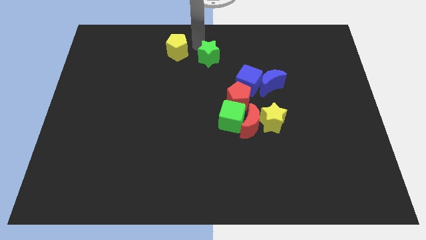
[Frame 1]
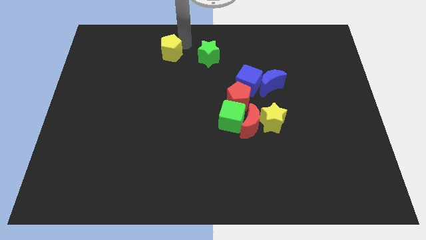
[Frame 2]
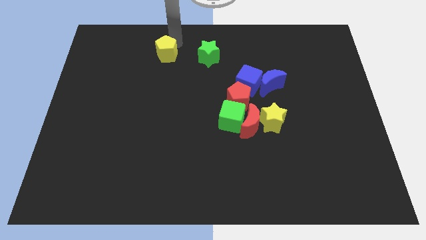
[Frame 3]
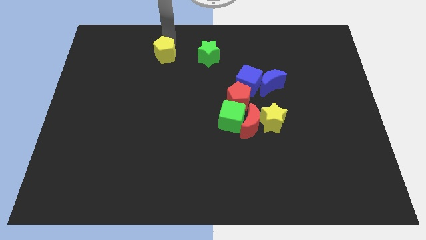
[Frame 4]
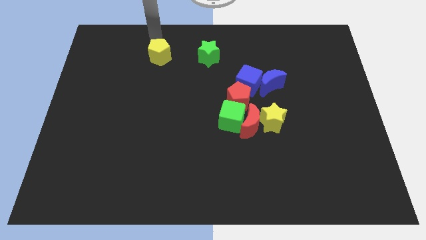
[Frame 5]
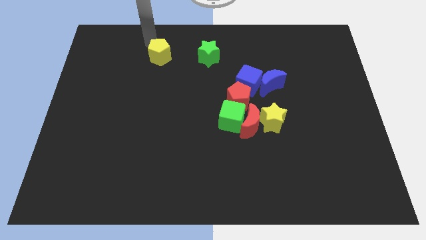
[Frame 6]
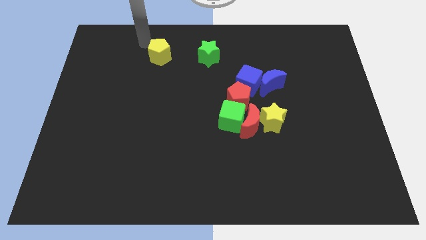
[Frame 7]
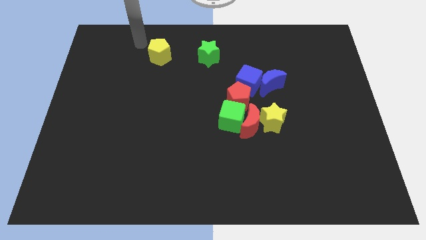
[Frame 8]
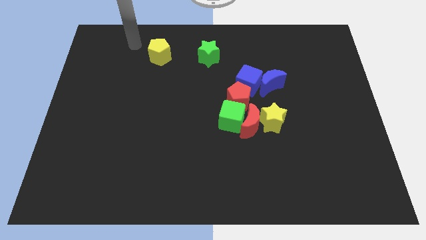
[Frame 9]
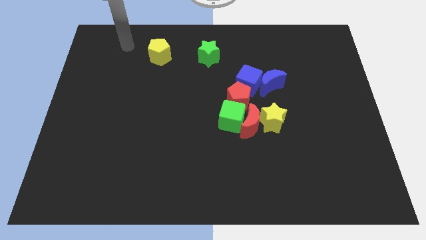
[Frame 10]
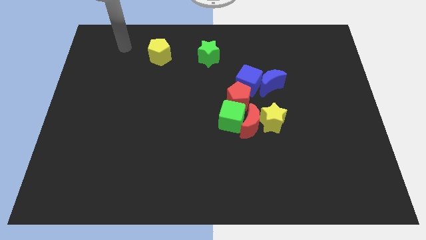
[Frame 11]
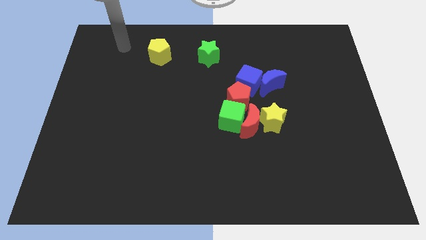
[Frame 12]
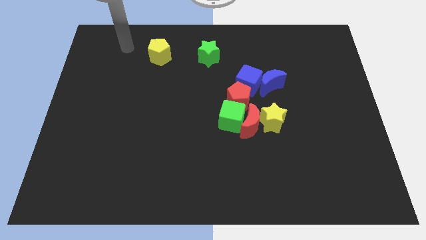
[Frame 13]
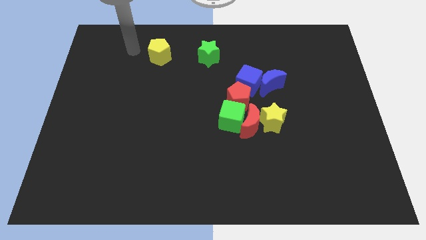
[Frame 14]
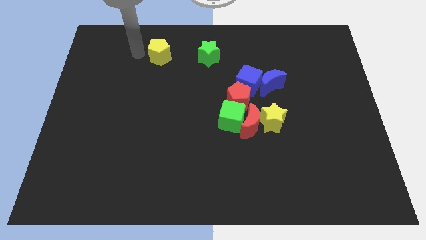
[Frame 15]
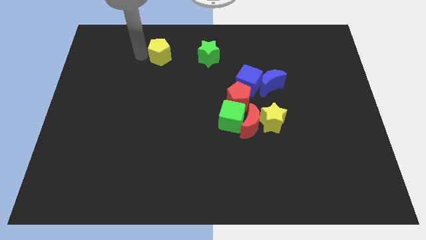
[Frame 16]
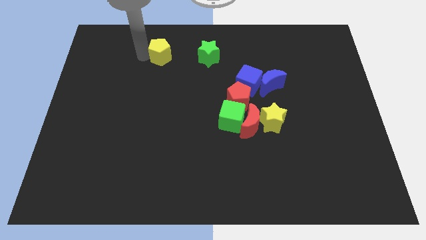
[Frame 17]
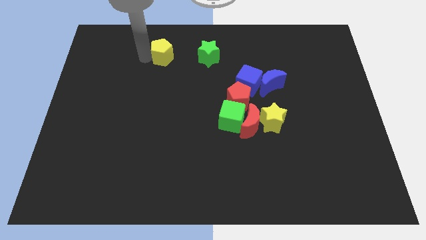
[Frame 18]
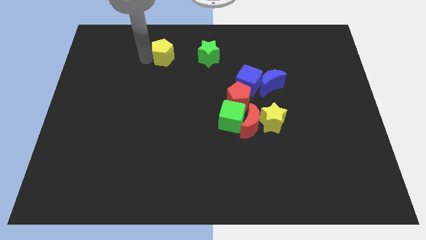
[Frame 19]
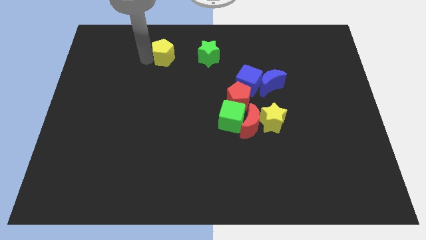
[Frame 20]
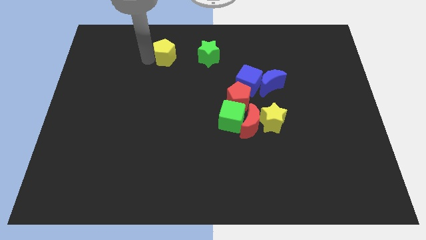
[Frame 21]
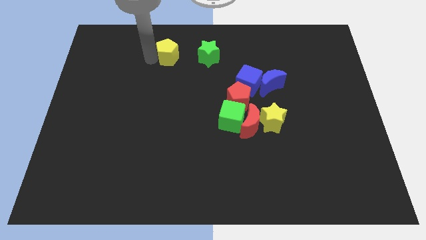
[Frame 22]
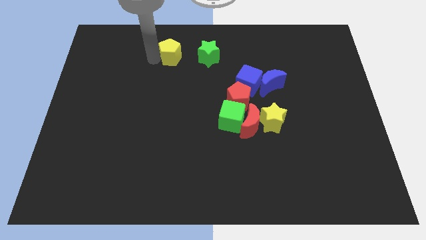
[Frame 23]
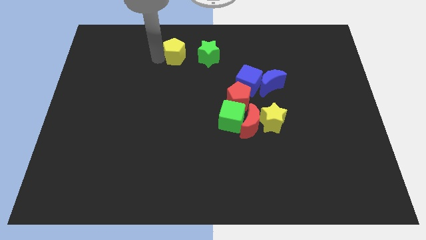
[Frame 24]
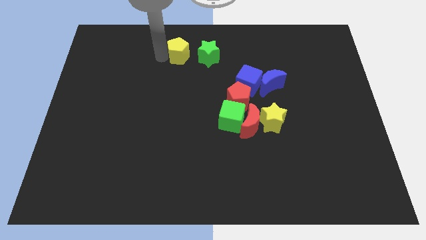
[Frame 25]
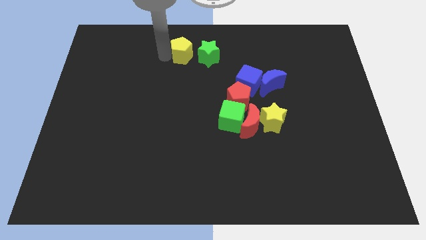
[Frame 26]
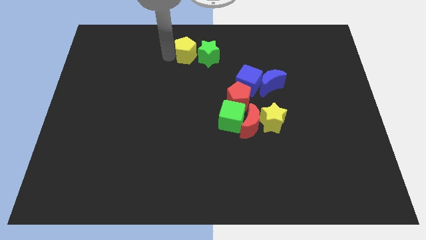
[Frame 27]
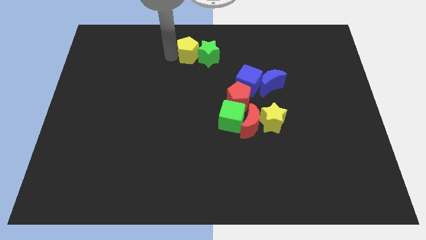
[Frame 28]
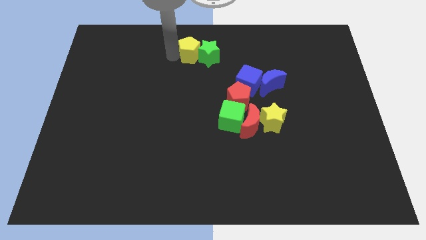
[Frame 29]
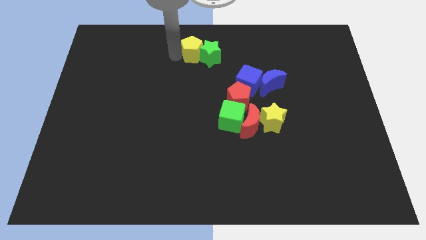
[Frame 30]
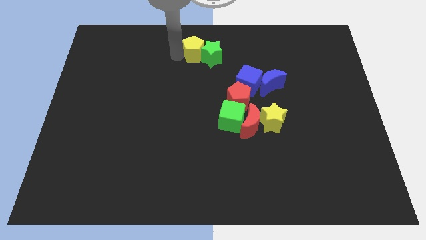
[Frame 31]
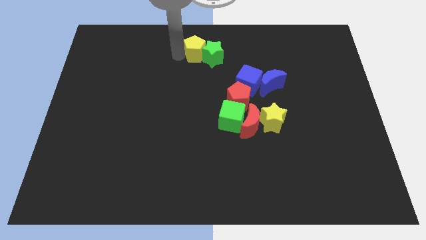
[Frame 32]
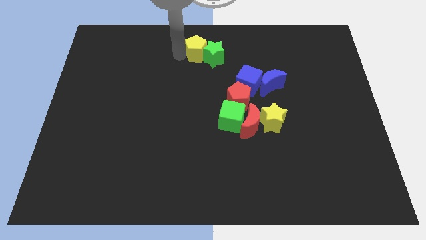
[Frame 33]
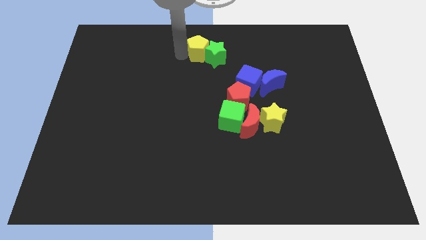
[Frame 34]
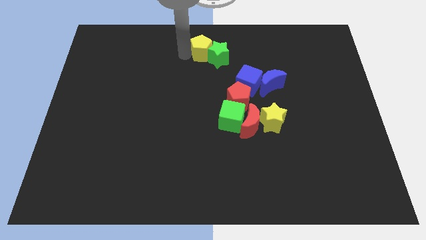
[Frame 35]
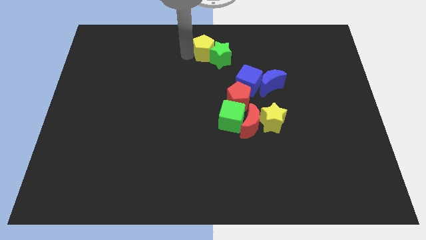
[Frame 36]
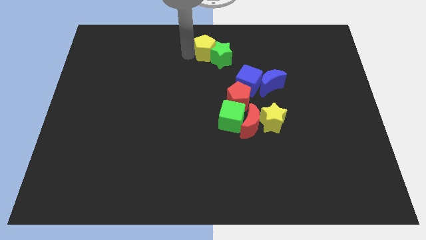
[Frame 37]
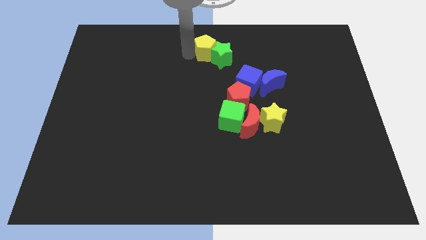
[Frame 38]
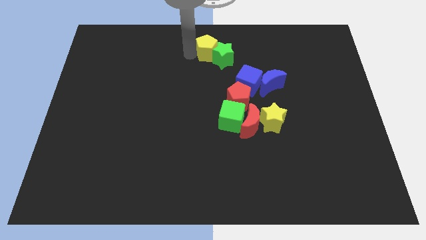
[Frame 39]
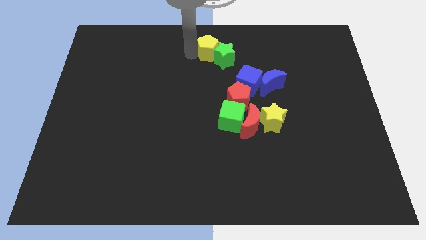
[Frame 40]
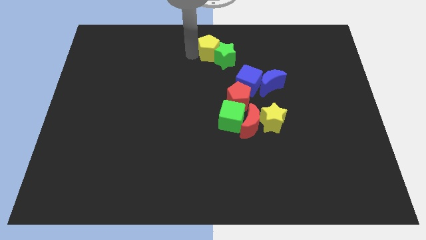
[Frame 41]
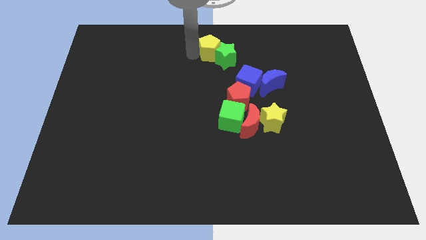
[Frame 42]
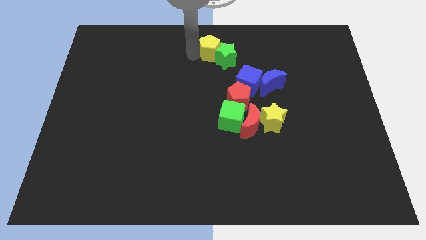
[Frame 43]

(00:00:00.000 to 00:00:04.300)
move the yellow pentagon into the green star

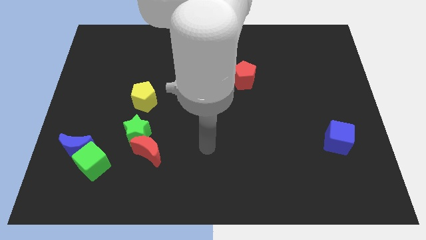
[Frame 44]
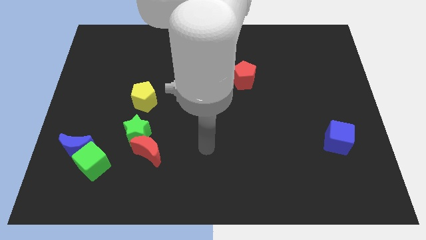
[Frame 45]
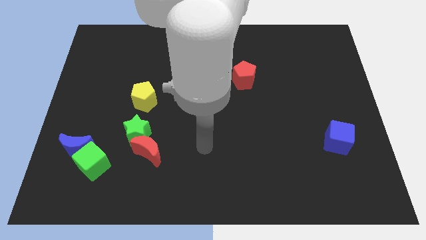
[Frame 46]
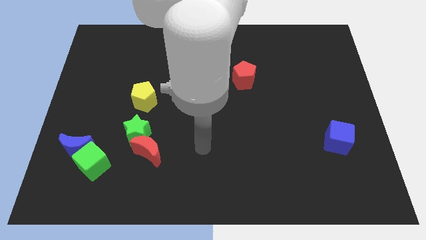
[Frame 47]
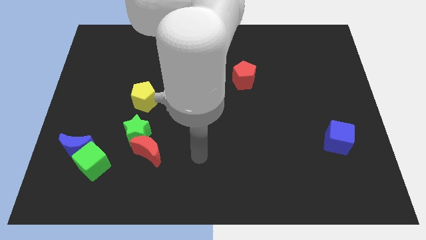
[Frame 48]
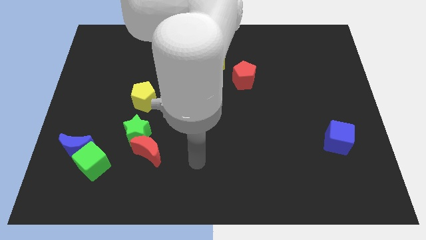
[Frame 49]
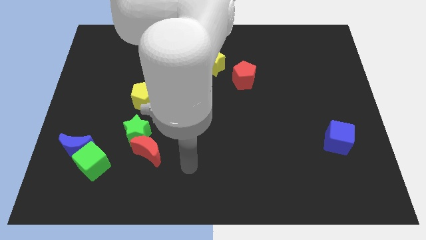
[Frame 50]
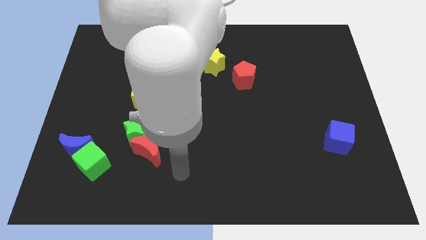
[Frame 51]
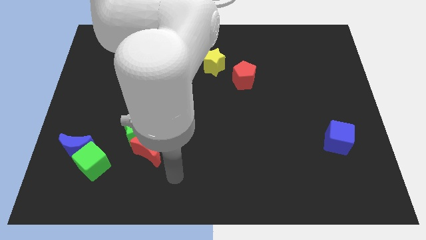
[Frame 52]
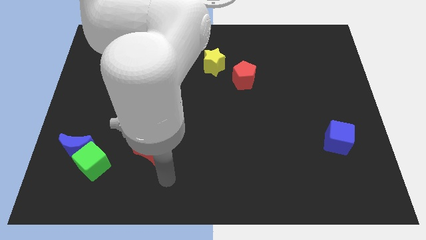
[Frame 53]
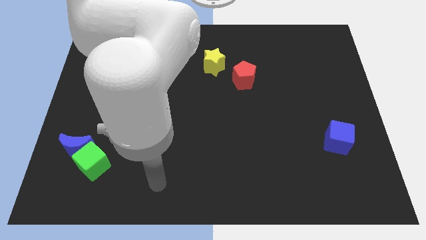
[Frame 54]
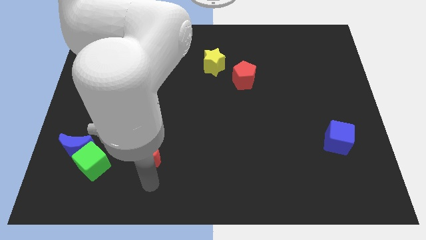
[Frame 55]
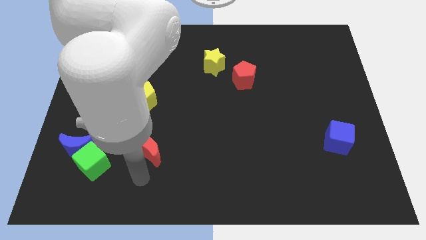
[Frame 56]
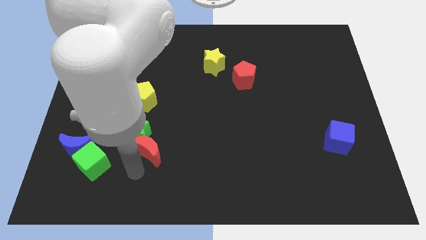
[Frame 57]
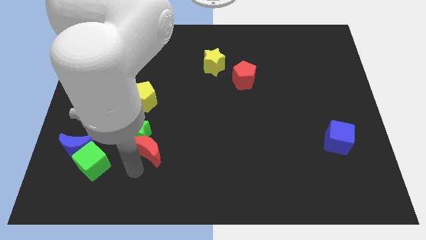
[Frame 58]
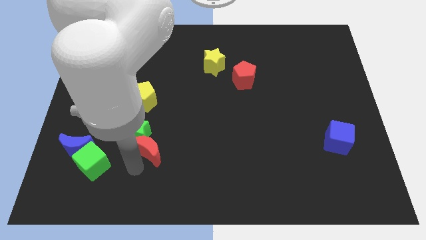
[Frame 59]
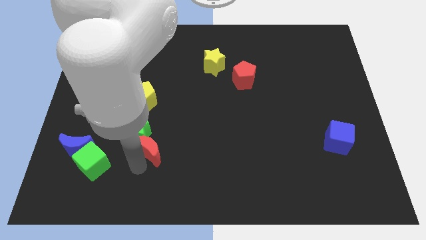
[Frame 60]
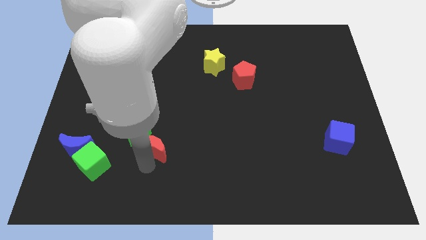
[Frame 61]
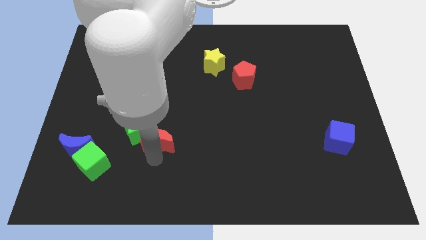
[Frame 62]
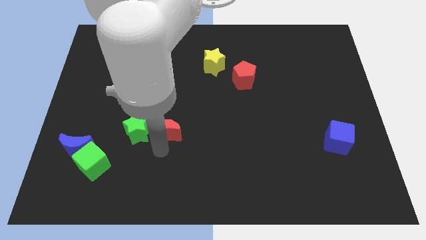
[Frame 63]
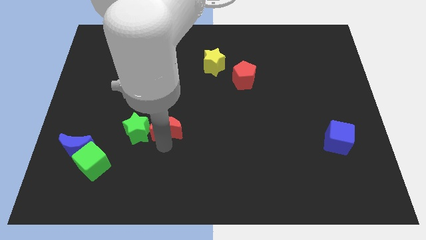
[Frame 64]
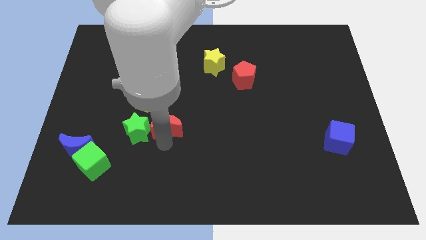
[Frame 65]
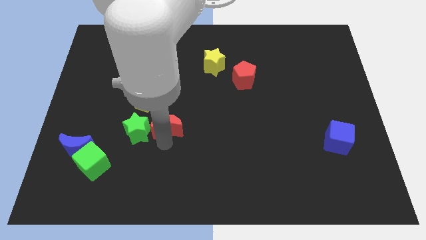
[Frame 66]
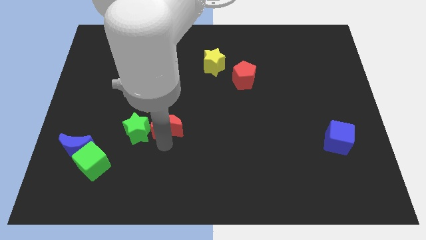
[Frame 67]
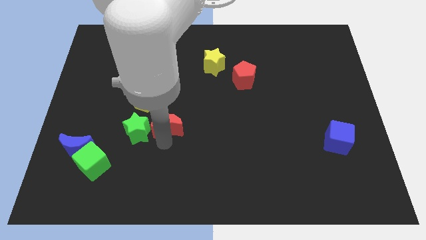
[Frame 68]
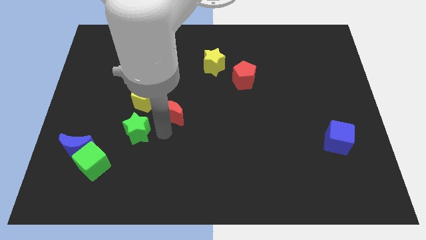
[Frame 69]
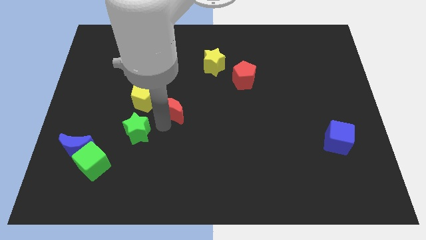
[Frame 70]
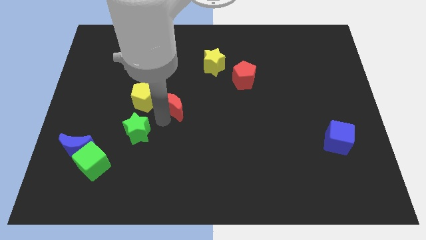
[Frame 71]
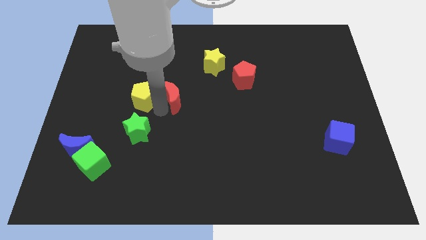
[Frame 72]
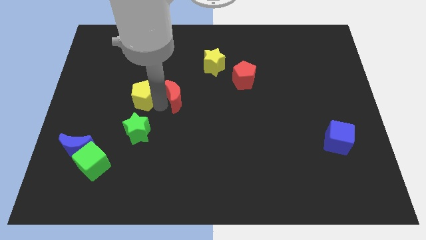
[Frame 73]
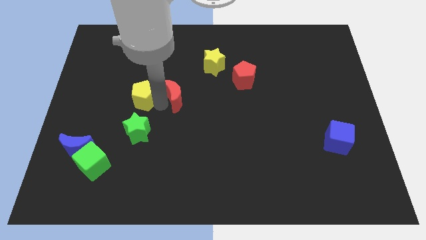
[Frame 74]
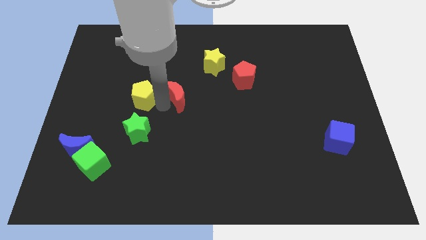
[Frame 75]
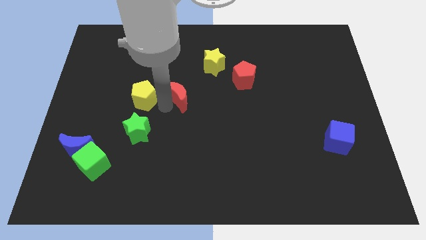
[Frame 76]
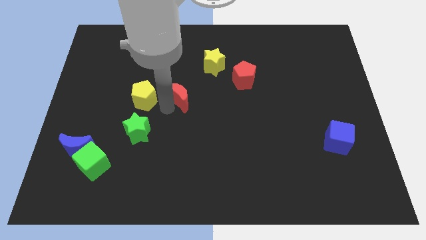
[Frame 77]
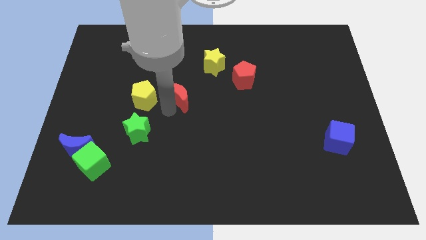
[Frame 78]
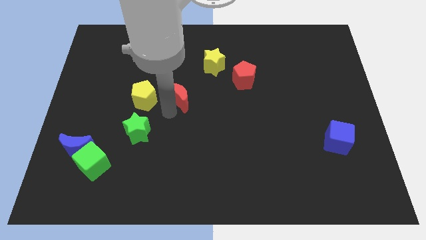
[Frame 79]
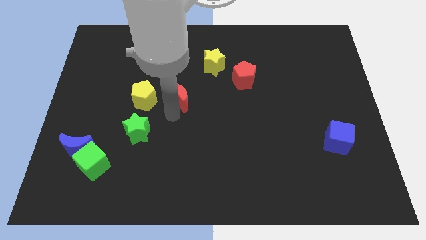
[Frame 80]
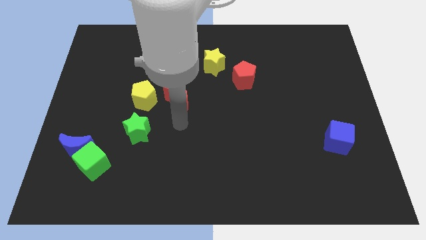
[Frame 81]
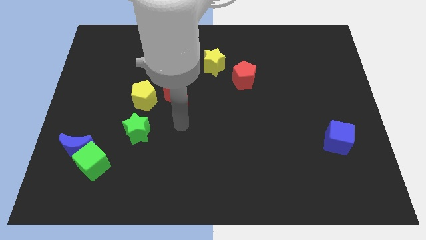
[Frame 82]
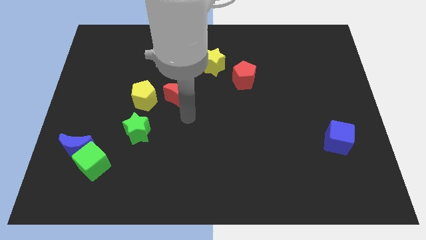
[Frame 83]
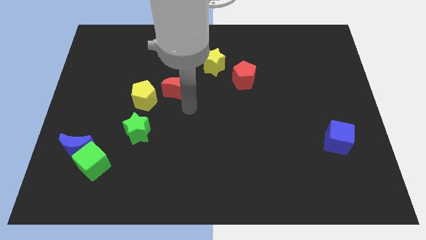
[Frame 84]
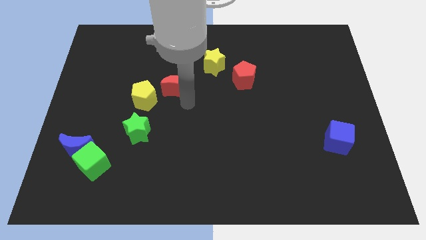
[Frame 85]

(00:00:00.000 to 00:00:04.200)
move the red crescent to the right side of the yellow pentagon

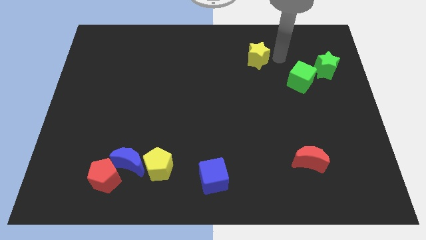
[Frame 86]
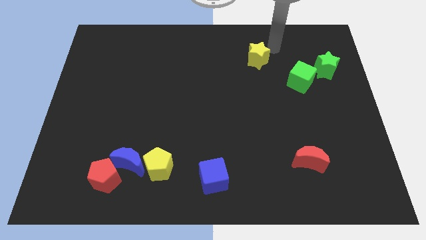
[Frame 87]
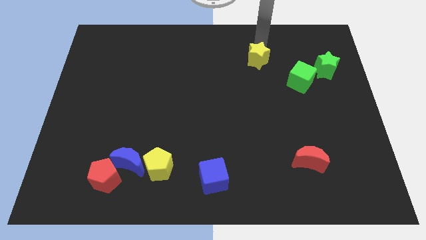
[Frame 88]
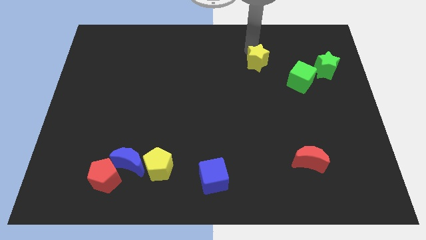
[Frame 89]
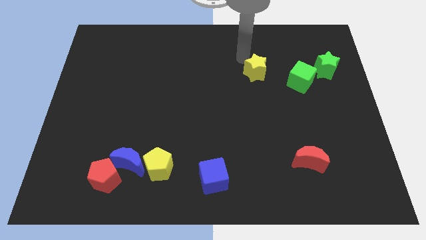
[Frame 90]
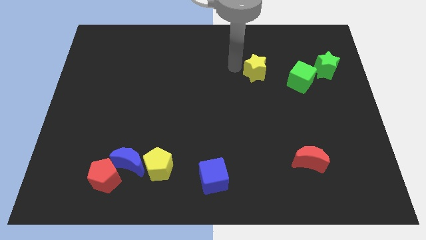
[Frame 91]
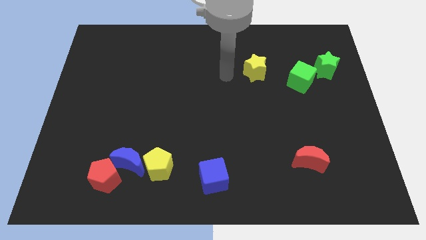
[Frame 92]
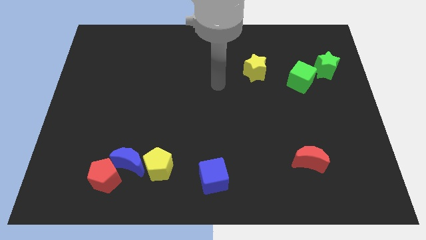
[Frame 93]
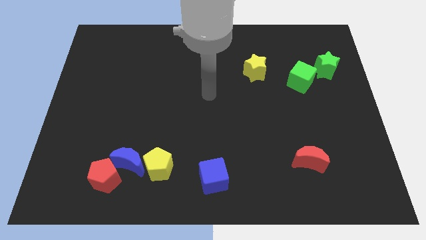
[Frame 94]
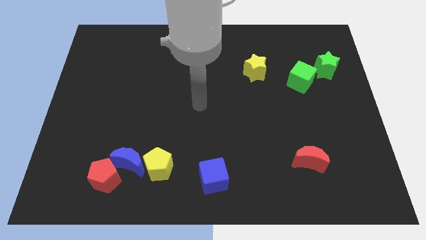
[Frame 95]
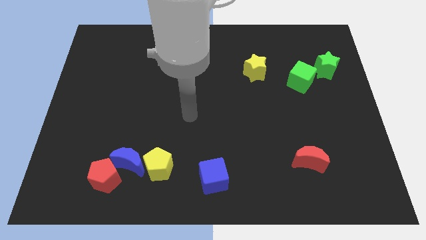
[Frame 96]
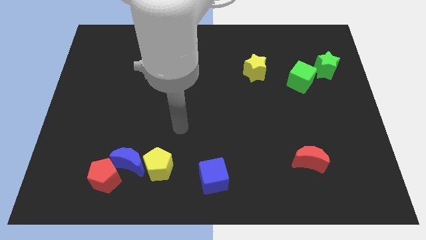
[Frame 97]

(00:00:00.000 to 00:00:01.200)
move the yellow star slightly to the bottom
